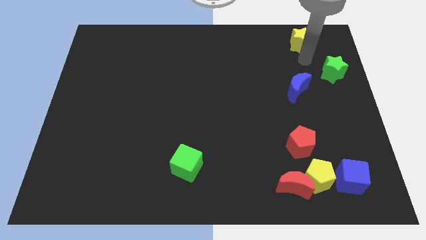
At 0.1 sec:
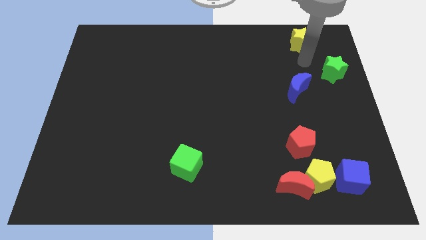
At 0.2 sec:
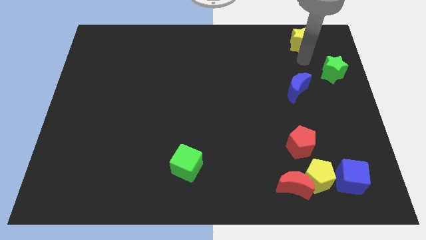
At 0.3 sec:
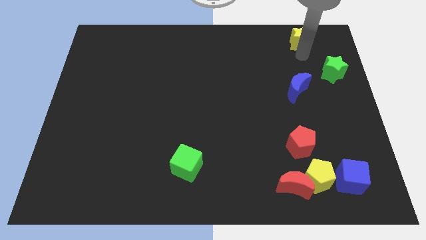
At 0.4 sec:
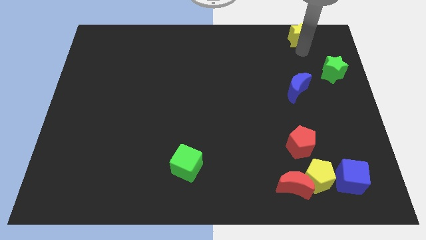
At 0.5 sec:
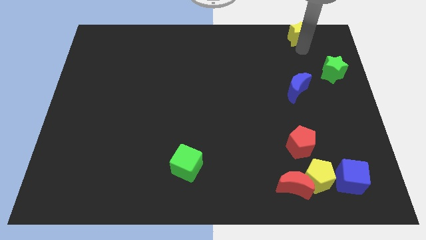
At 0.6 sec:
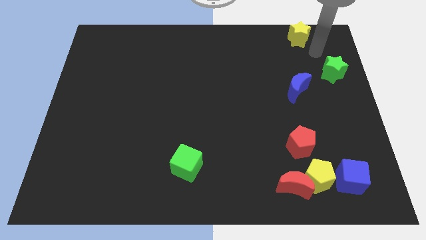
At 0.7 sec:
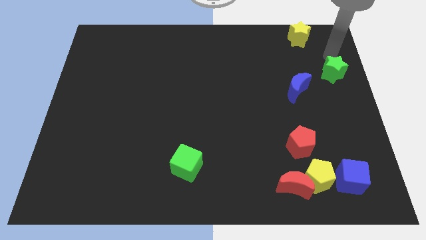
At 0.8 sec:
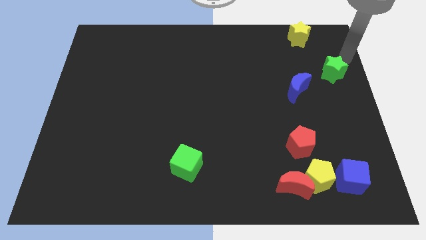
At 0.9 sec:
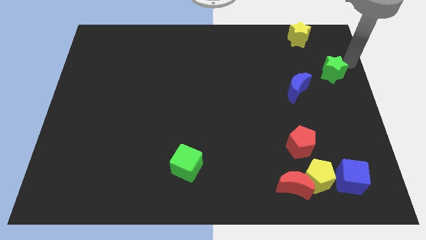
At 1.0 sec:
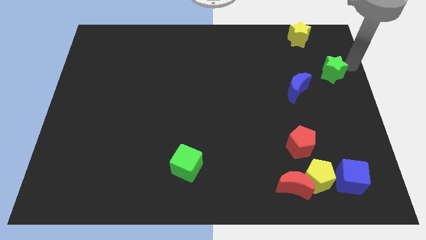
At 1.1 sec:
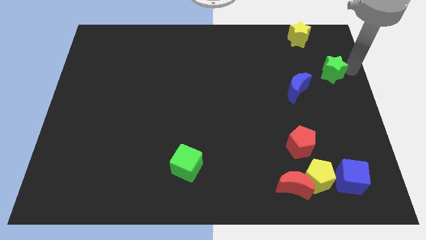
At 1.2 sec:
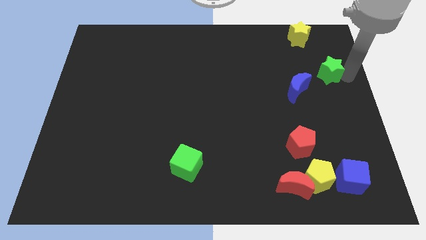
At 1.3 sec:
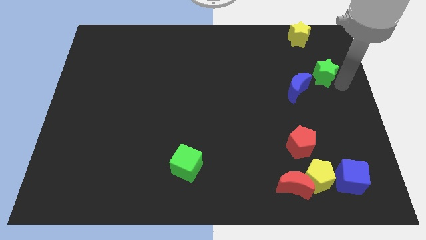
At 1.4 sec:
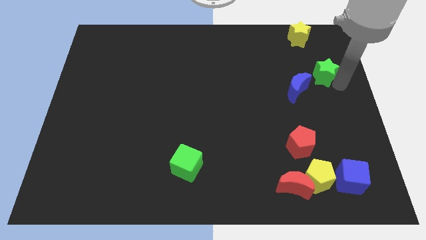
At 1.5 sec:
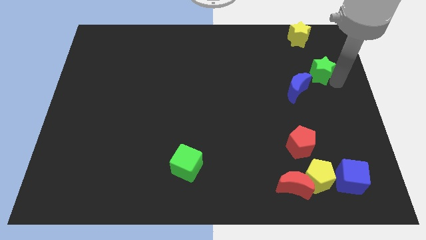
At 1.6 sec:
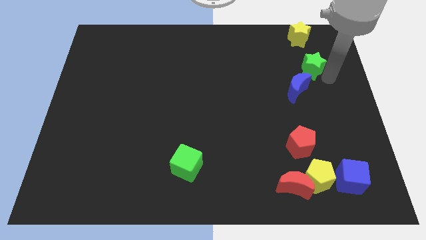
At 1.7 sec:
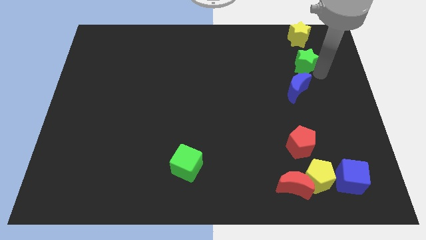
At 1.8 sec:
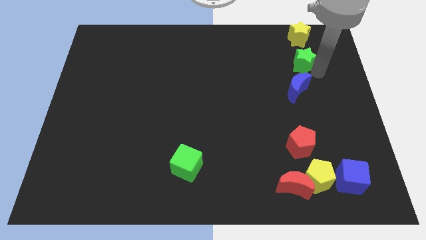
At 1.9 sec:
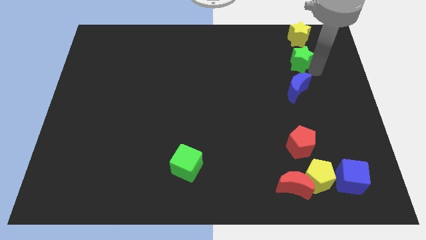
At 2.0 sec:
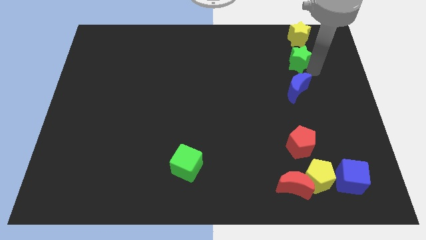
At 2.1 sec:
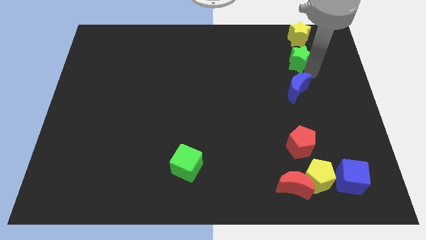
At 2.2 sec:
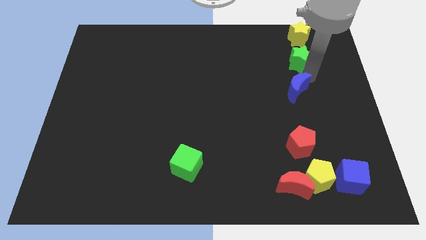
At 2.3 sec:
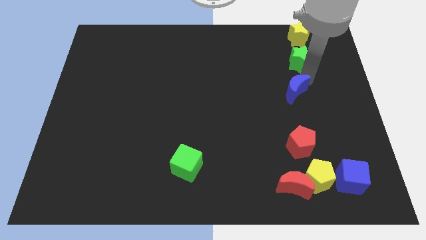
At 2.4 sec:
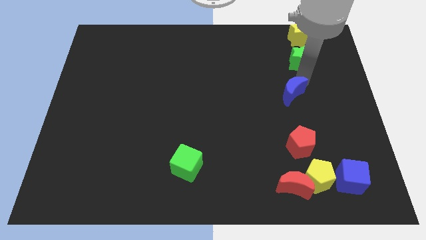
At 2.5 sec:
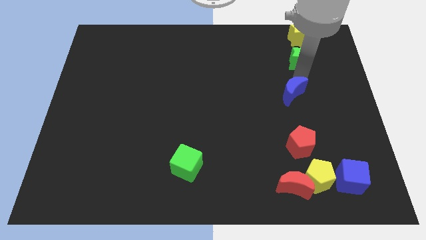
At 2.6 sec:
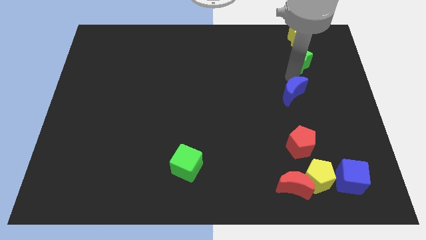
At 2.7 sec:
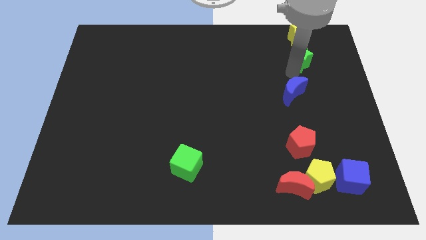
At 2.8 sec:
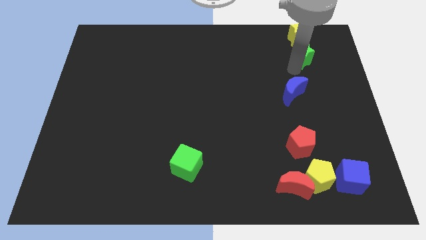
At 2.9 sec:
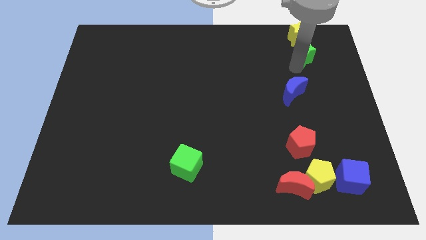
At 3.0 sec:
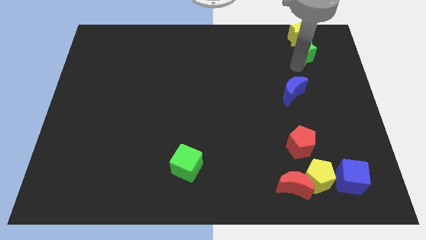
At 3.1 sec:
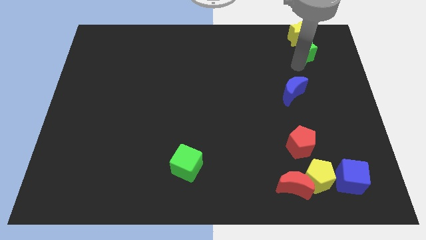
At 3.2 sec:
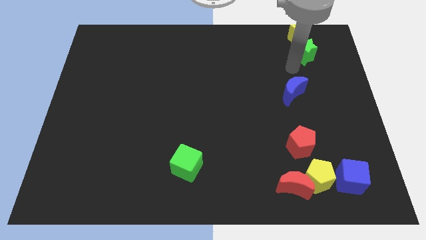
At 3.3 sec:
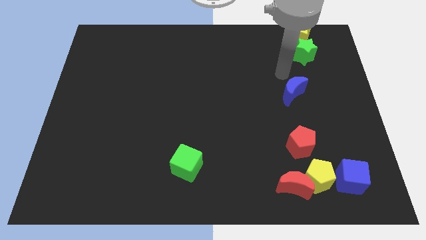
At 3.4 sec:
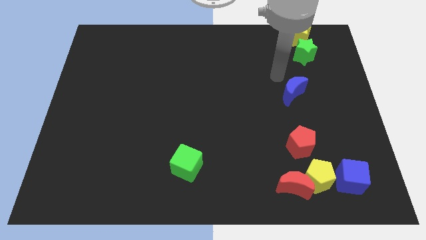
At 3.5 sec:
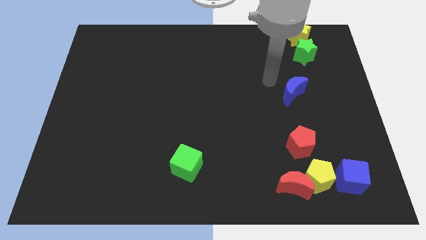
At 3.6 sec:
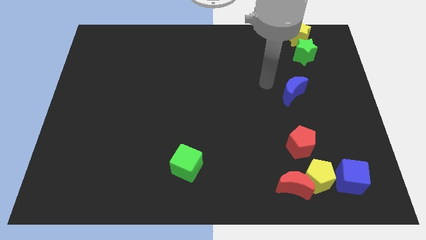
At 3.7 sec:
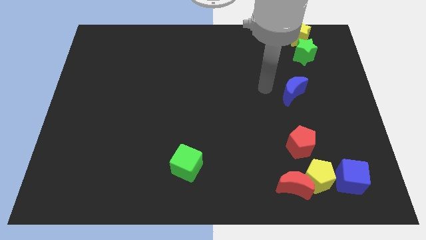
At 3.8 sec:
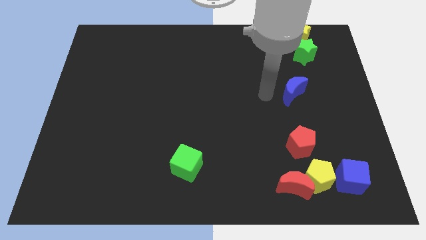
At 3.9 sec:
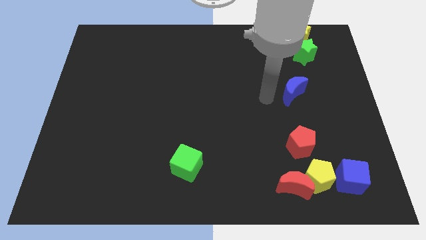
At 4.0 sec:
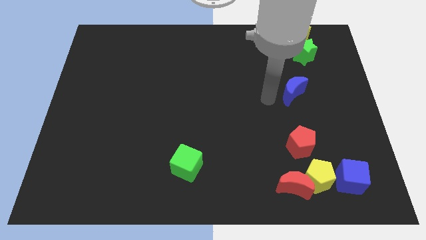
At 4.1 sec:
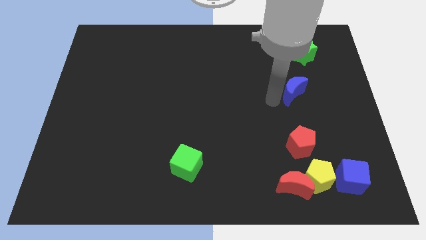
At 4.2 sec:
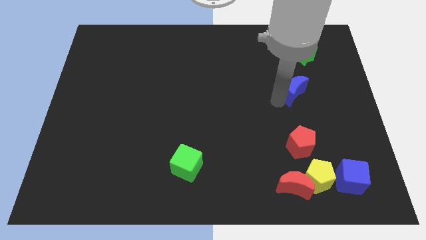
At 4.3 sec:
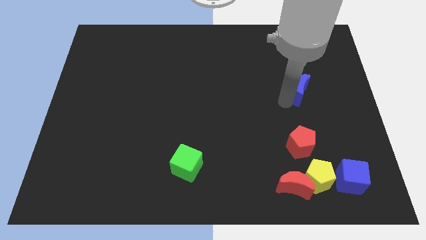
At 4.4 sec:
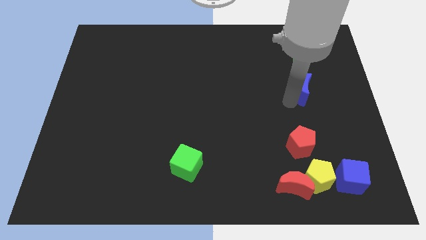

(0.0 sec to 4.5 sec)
place the green star in between the yellow star and blue moon

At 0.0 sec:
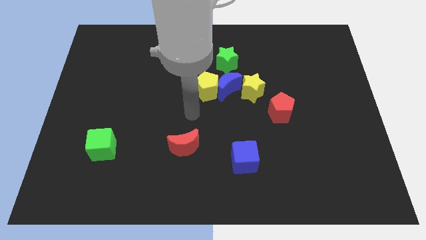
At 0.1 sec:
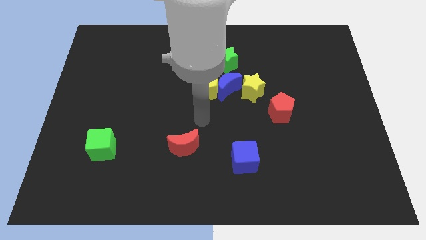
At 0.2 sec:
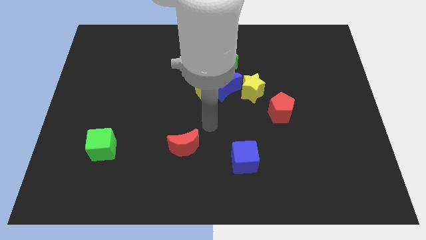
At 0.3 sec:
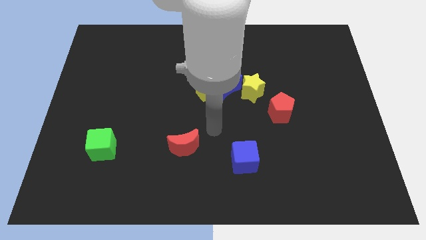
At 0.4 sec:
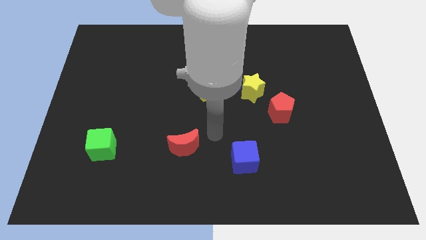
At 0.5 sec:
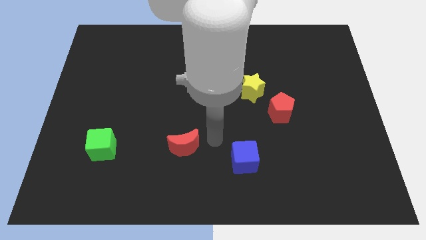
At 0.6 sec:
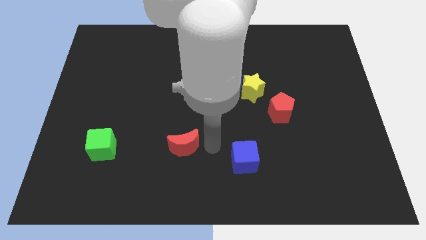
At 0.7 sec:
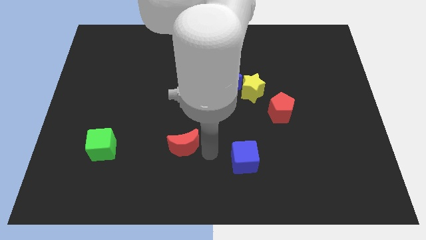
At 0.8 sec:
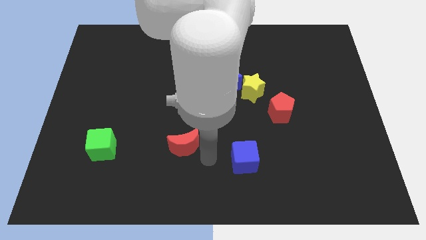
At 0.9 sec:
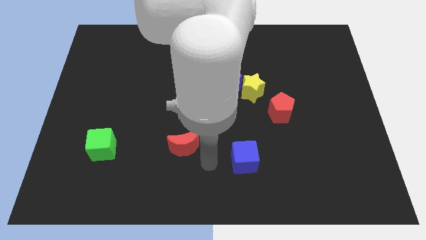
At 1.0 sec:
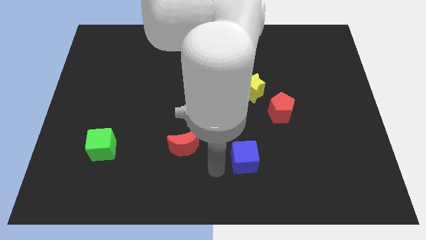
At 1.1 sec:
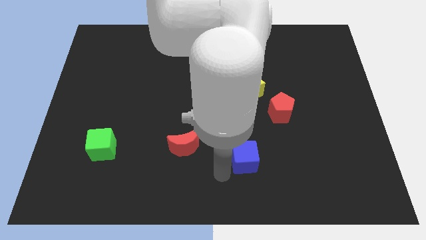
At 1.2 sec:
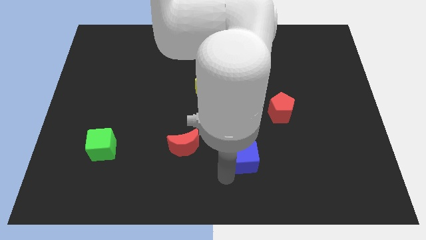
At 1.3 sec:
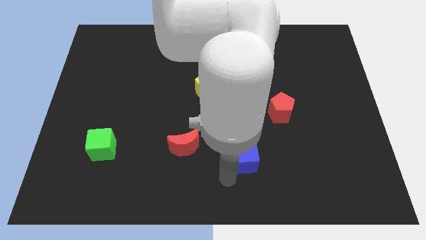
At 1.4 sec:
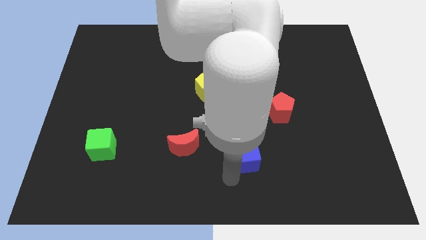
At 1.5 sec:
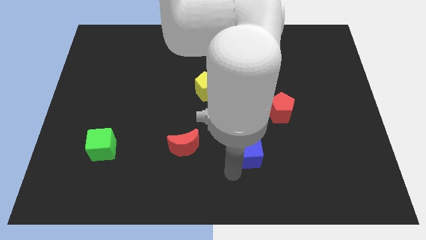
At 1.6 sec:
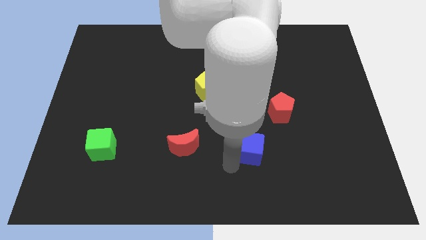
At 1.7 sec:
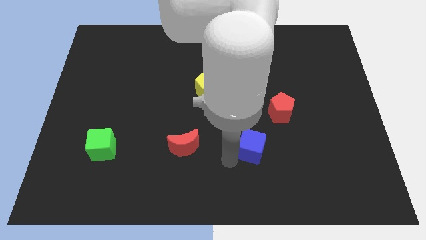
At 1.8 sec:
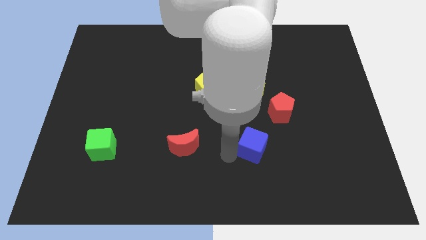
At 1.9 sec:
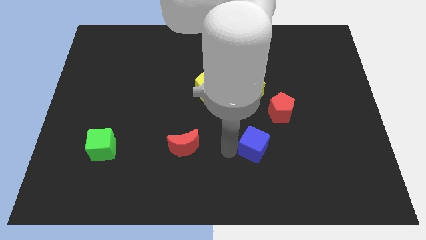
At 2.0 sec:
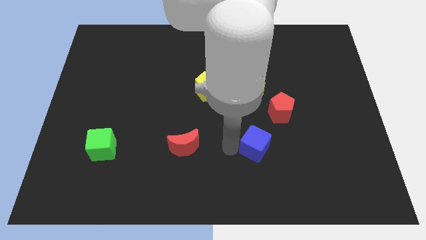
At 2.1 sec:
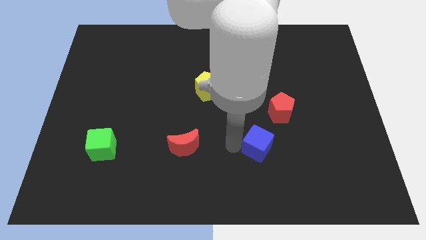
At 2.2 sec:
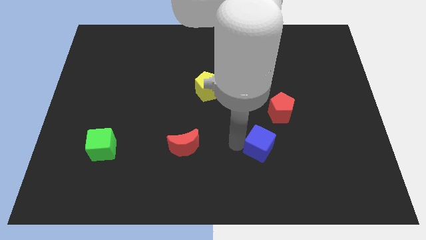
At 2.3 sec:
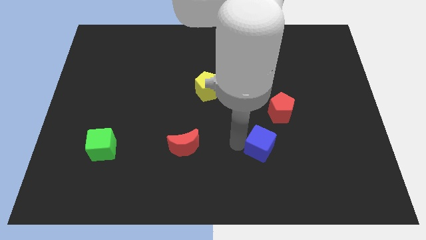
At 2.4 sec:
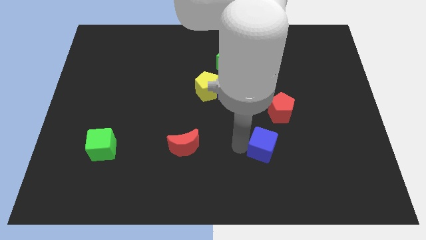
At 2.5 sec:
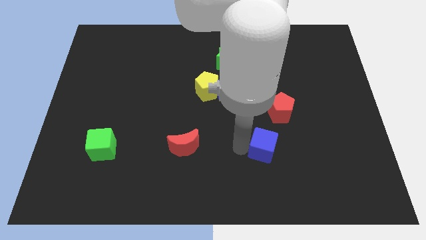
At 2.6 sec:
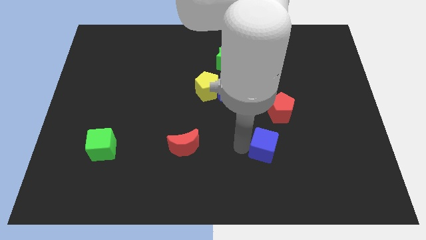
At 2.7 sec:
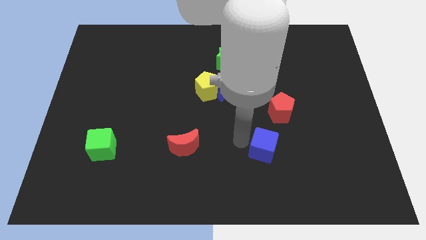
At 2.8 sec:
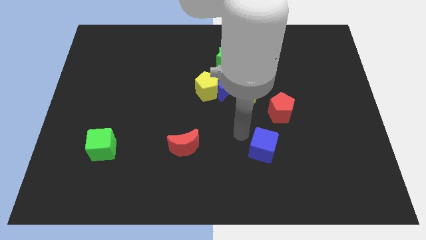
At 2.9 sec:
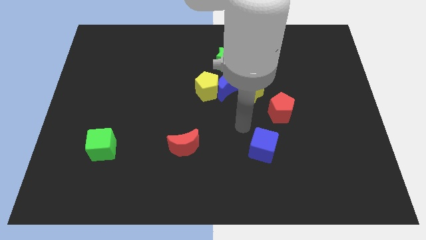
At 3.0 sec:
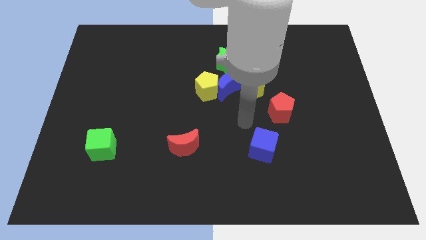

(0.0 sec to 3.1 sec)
push the blue cube to the bottom of the red pentagon

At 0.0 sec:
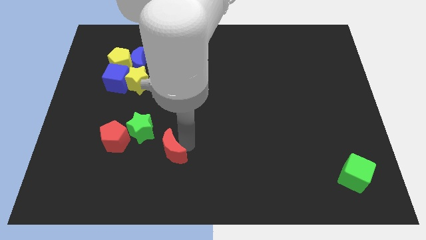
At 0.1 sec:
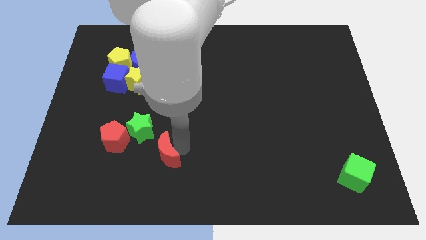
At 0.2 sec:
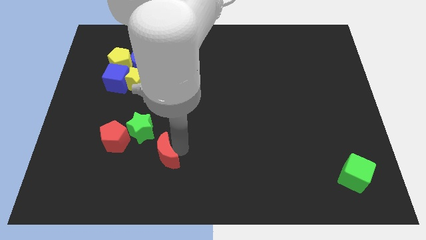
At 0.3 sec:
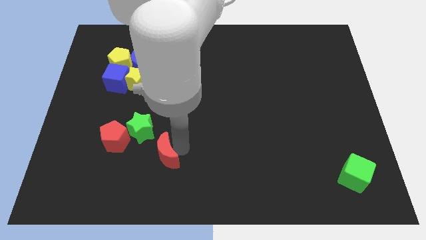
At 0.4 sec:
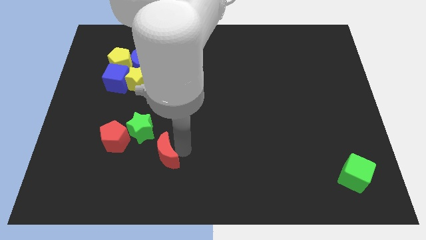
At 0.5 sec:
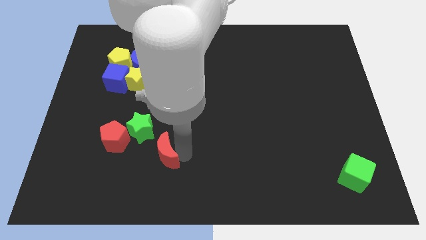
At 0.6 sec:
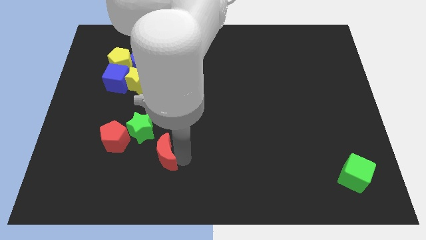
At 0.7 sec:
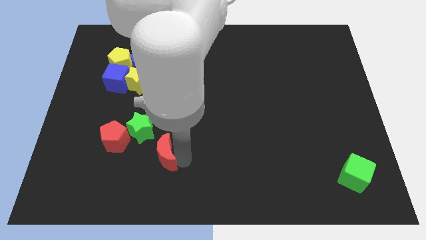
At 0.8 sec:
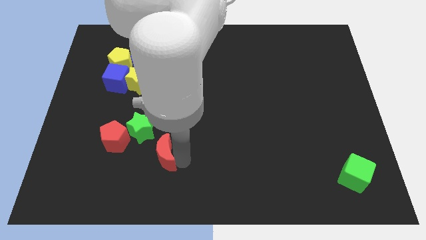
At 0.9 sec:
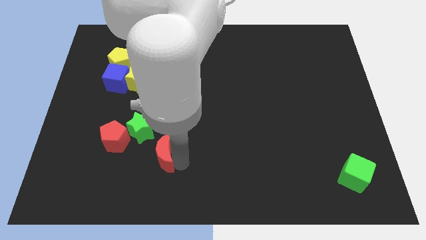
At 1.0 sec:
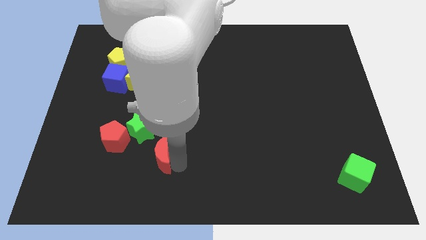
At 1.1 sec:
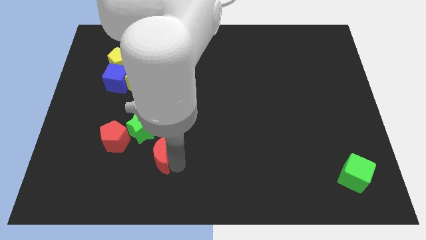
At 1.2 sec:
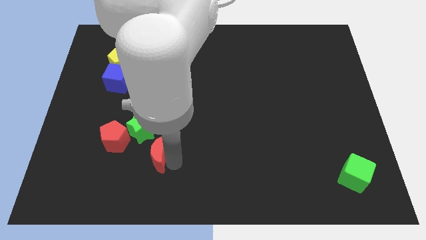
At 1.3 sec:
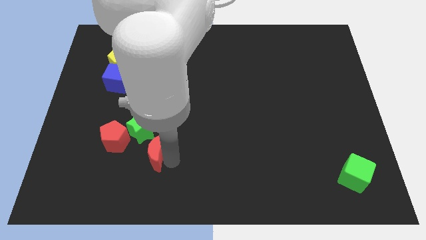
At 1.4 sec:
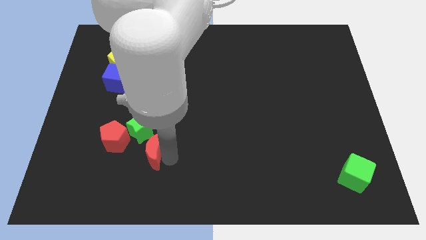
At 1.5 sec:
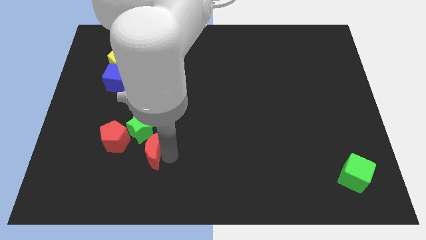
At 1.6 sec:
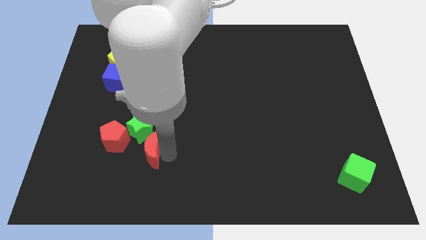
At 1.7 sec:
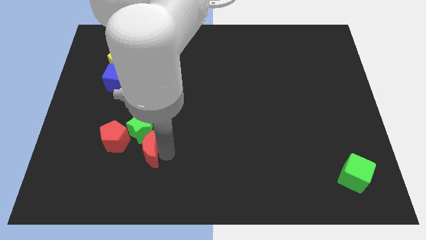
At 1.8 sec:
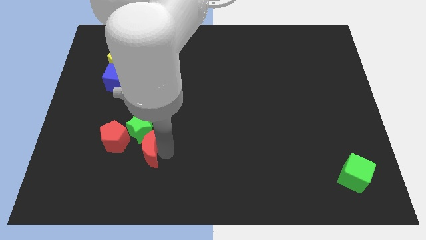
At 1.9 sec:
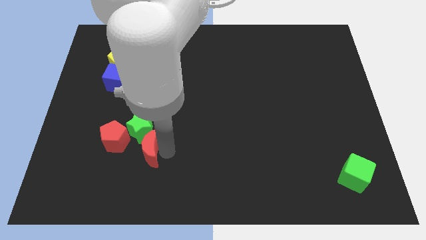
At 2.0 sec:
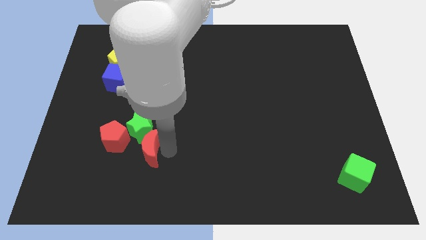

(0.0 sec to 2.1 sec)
push red moon into green star
